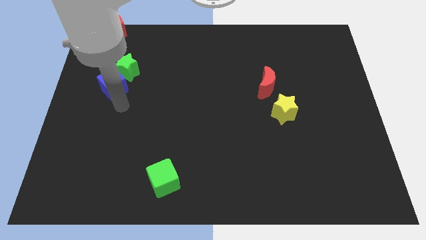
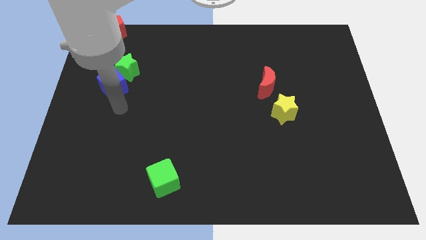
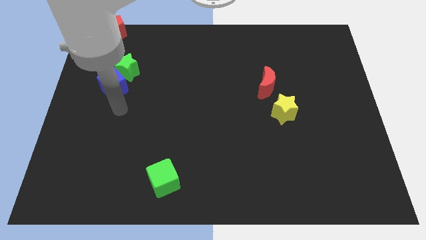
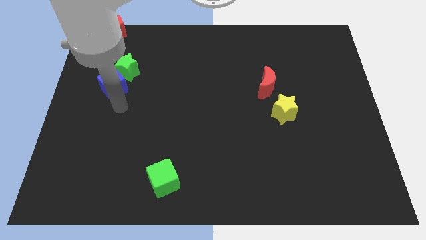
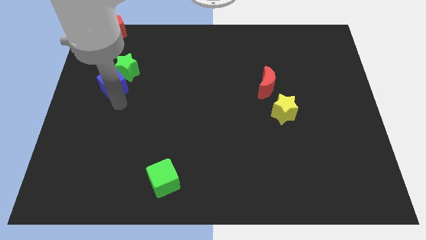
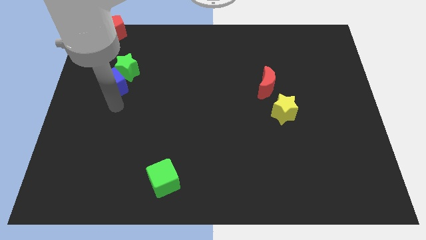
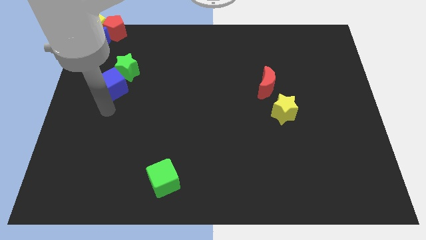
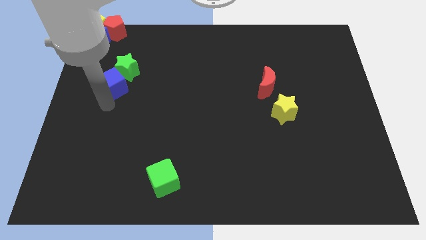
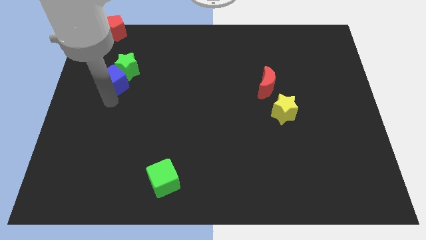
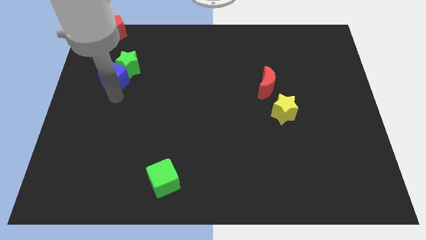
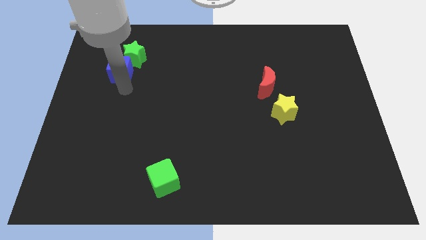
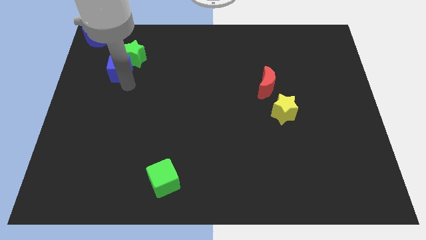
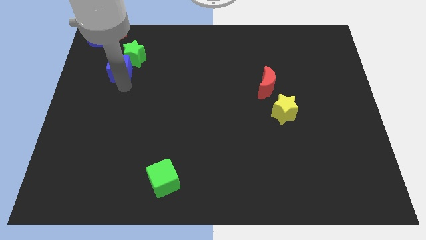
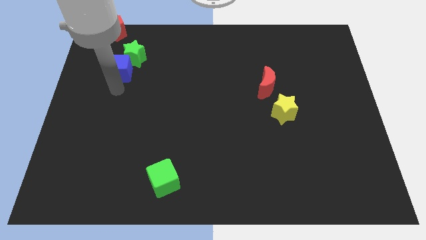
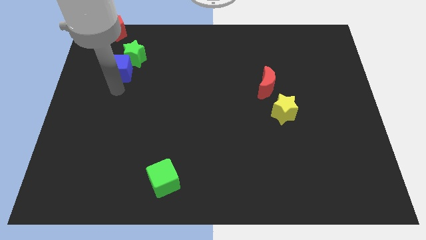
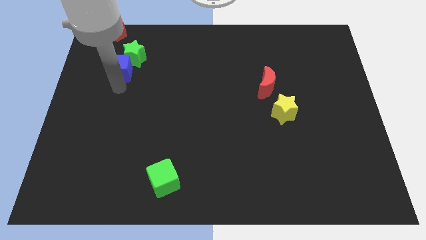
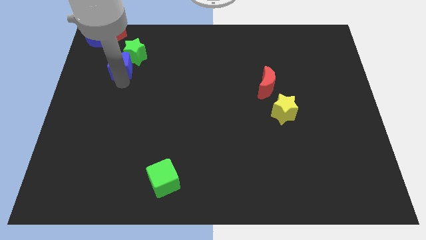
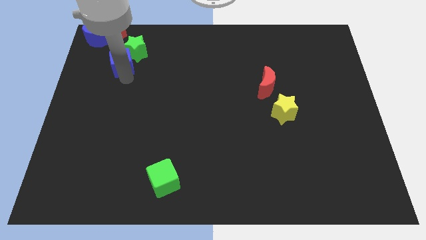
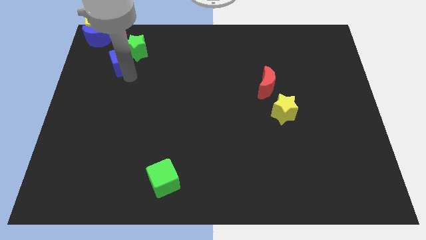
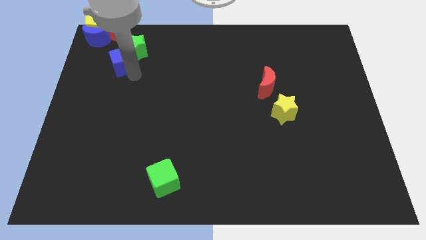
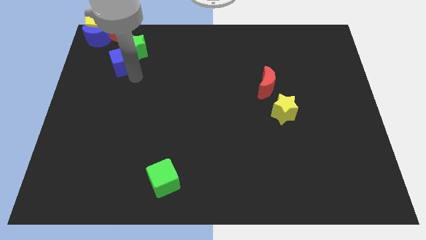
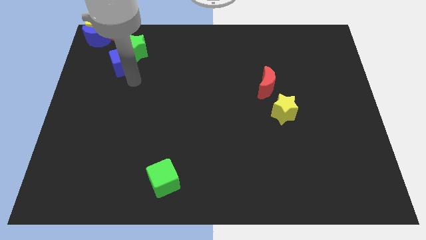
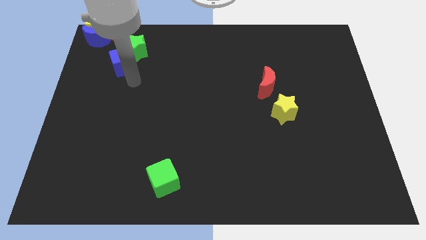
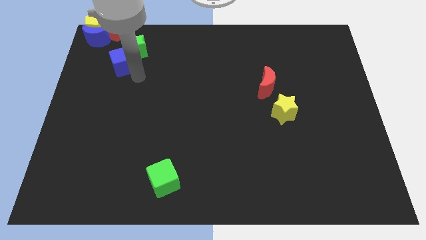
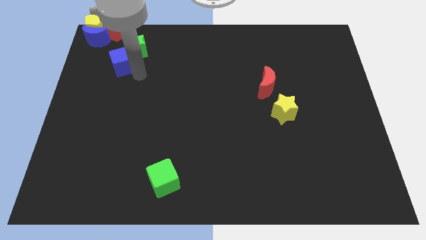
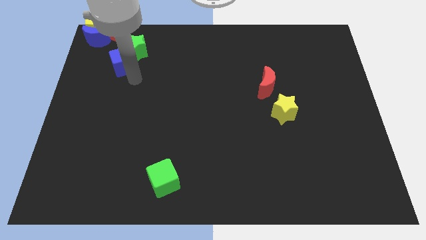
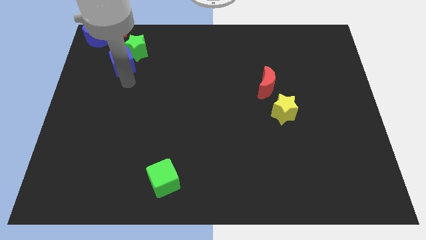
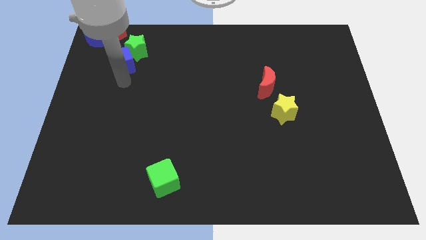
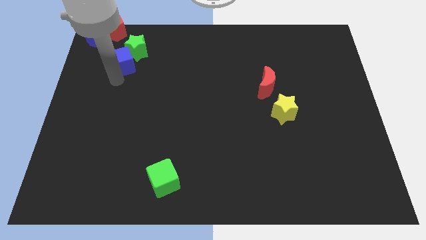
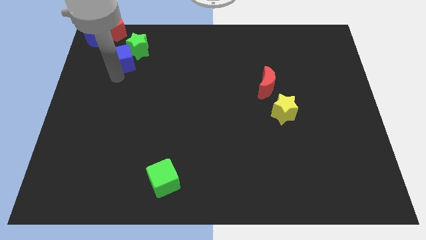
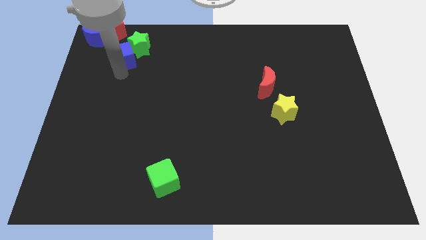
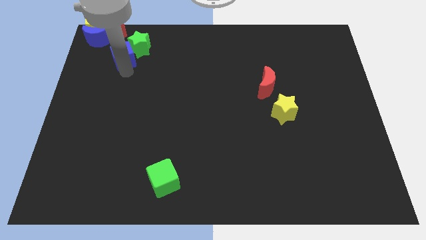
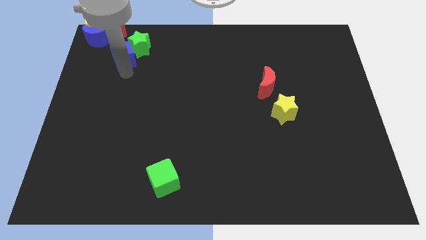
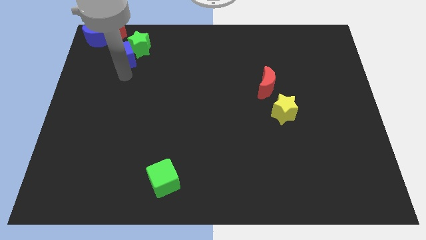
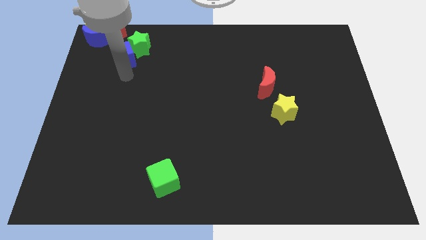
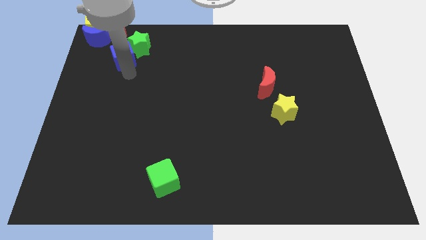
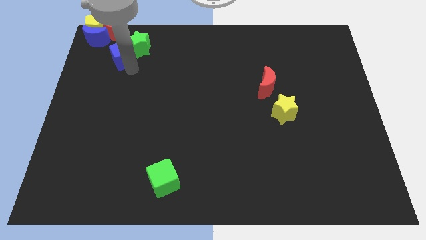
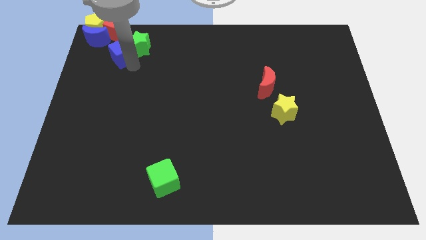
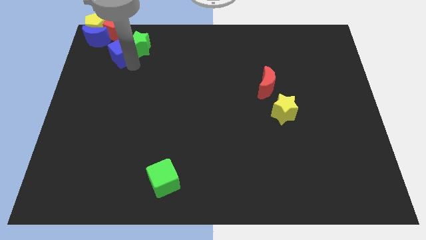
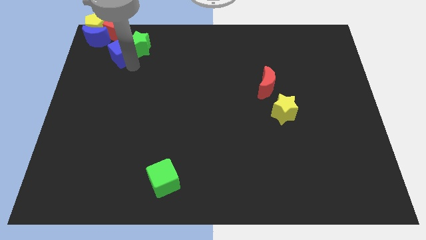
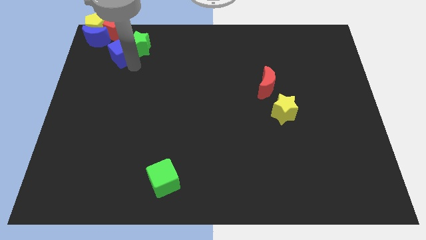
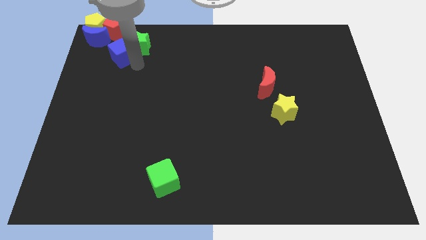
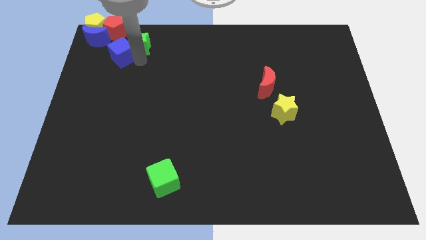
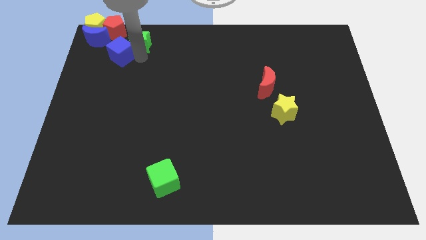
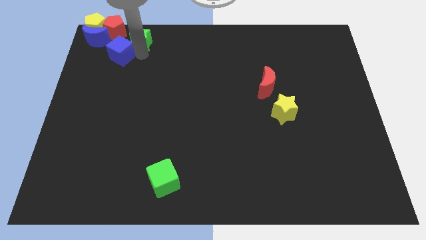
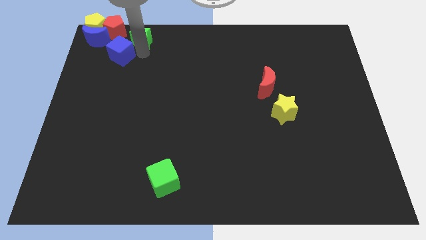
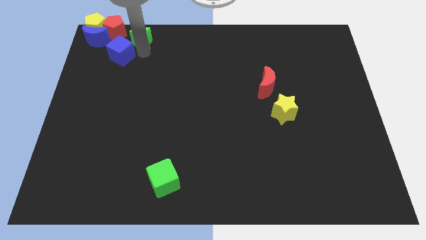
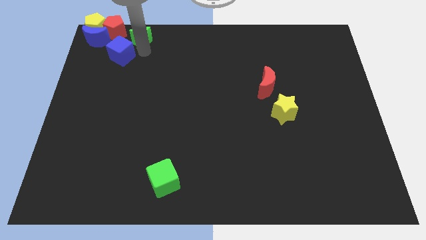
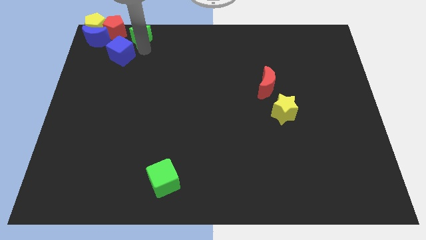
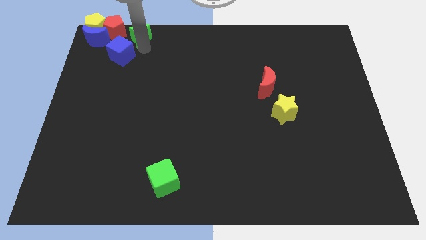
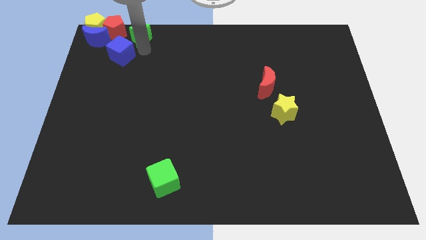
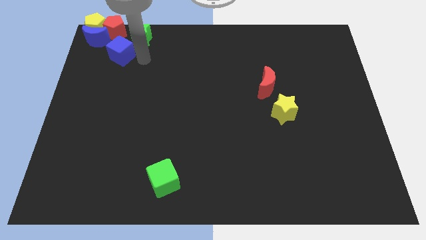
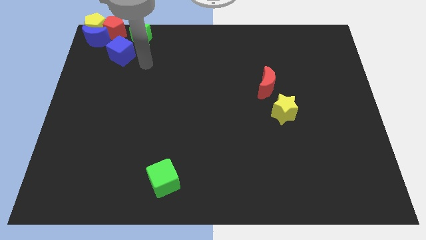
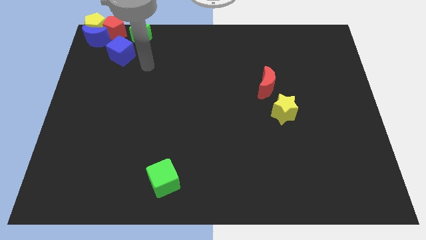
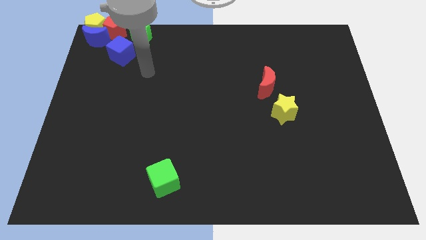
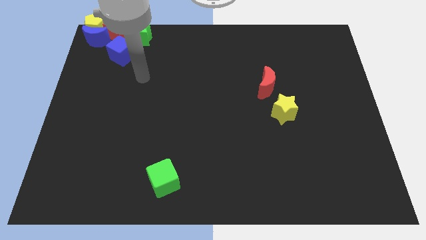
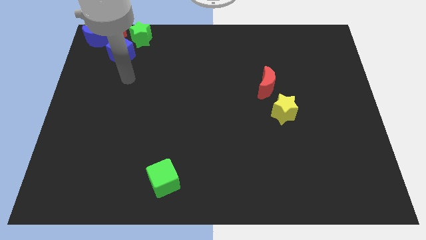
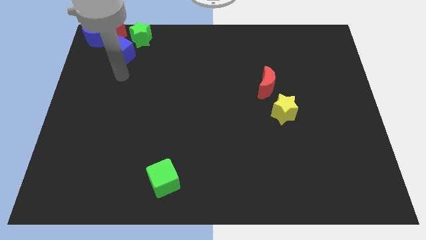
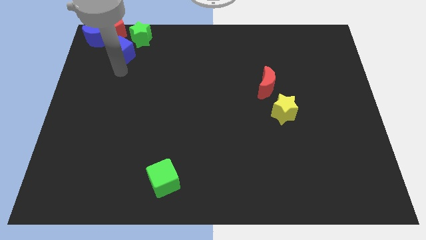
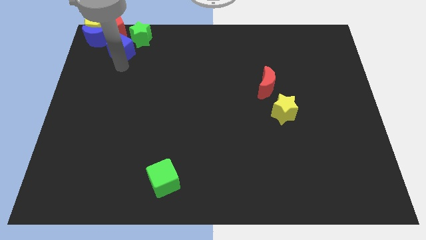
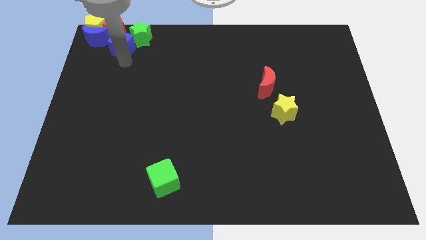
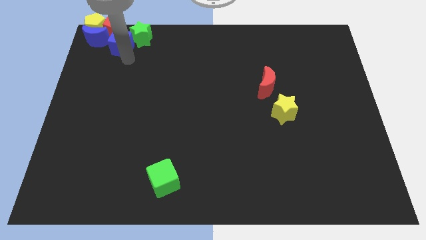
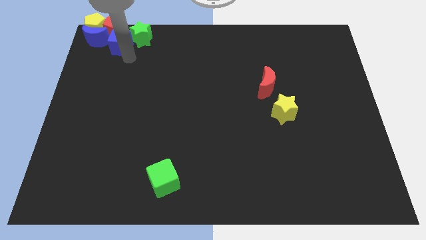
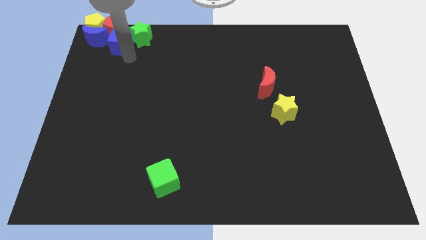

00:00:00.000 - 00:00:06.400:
move the green star and blue cube to the bottom of red pentagon

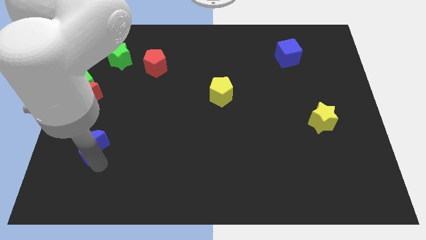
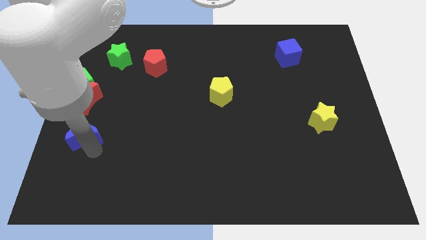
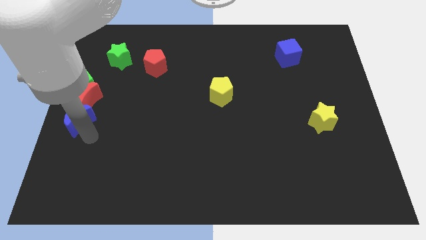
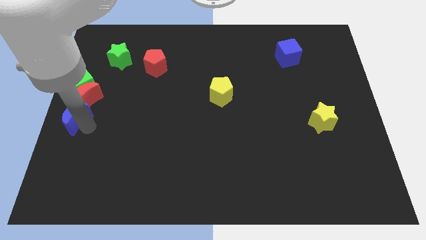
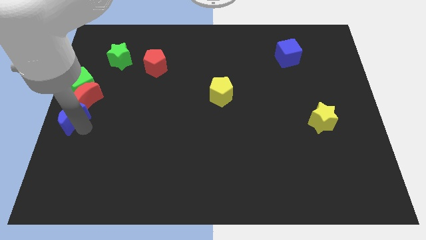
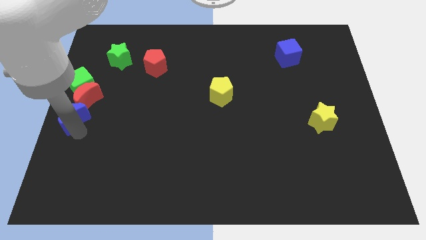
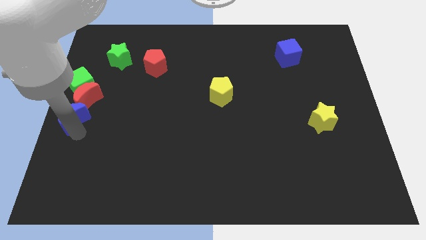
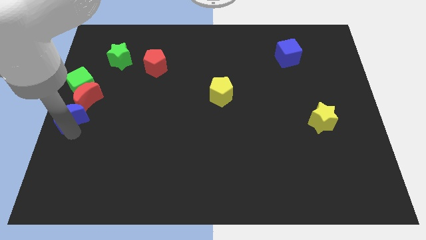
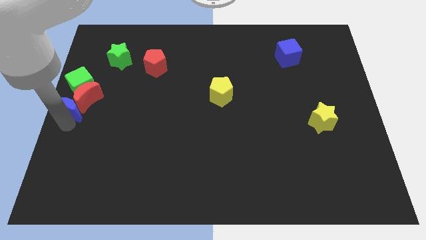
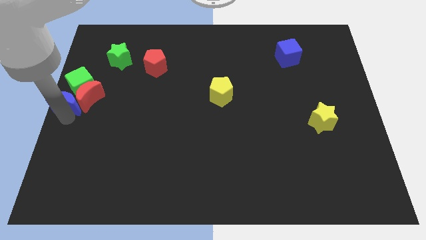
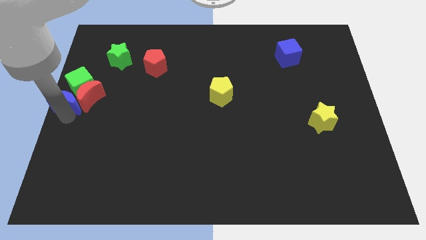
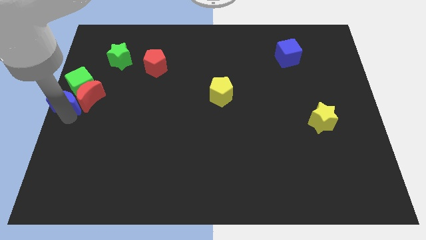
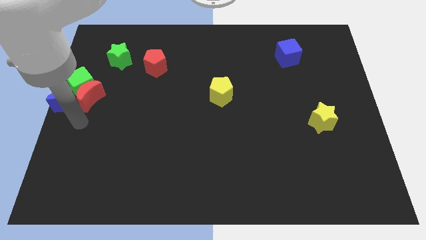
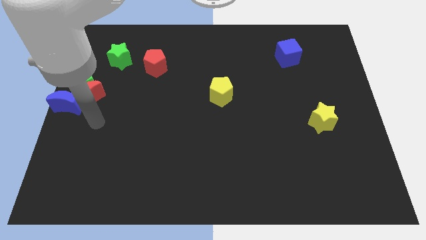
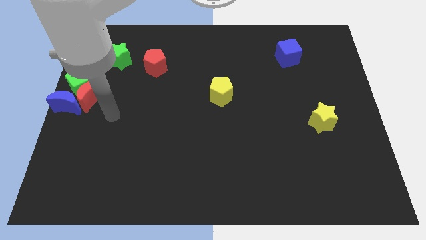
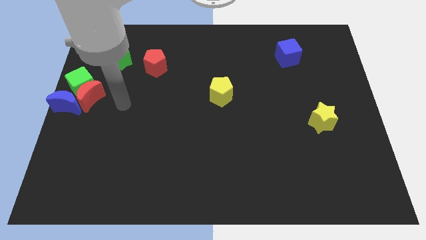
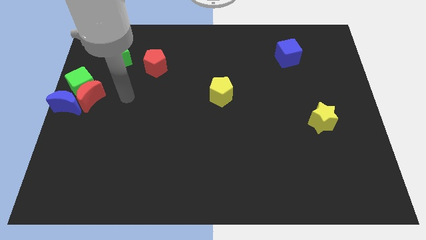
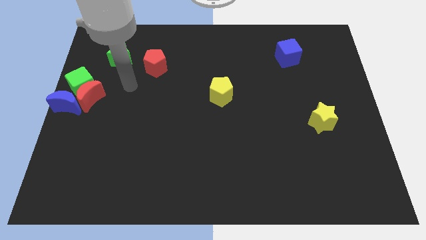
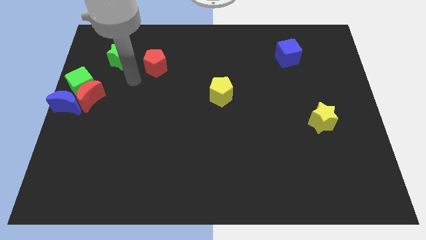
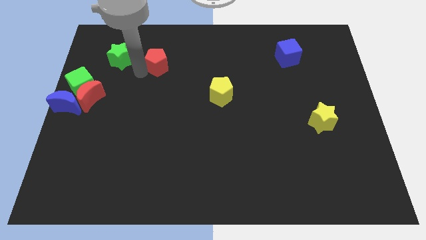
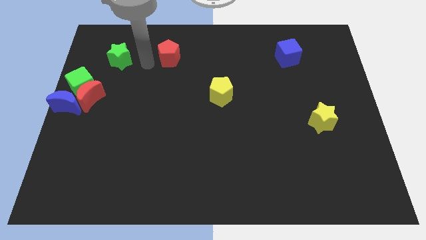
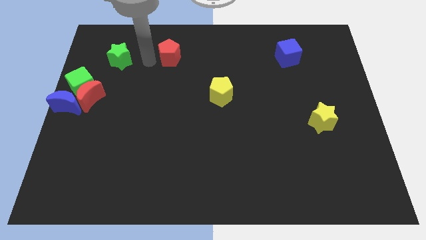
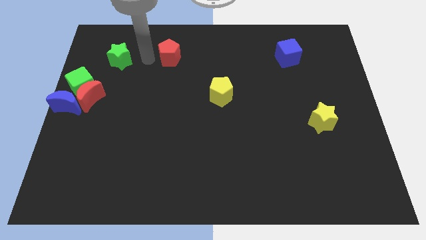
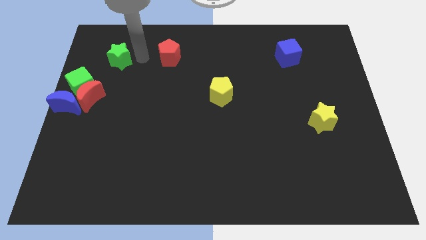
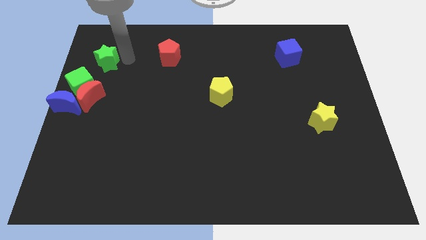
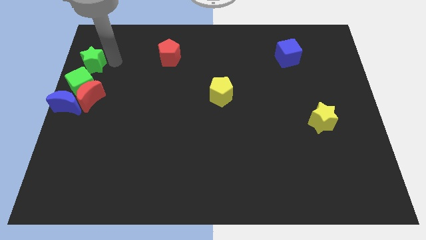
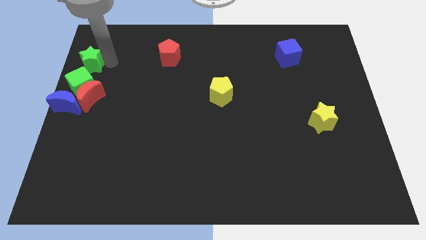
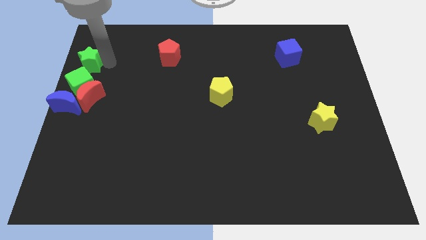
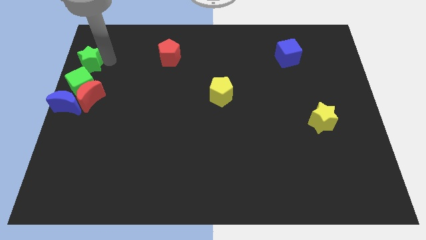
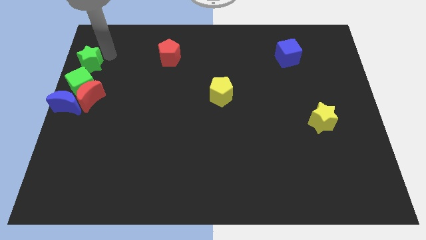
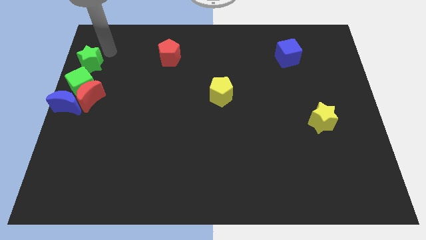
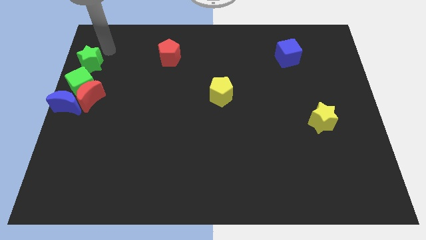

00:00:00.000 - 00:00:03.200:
place the green star above the green cube
